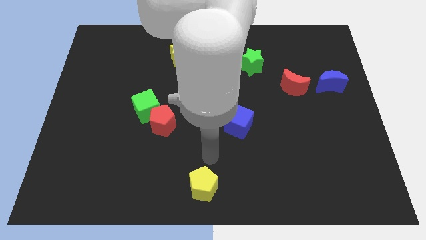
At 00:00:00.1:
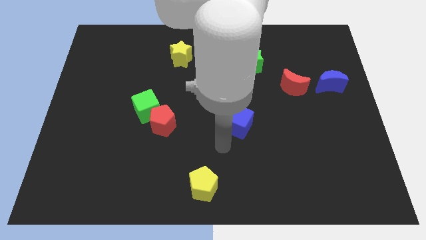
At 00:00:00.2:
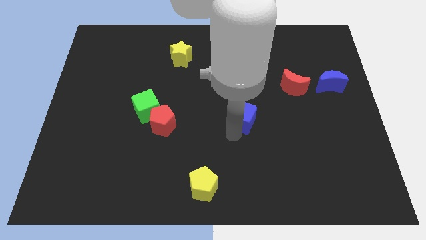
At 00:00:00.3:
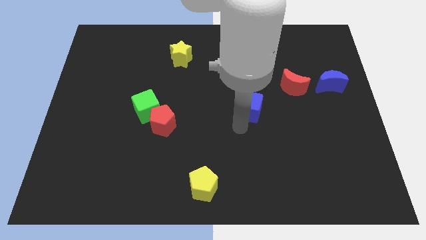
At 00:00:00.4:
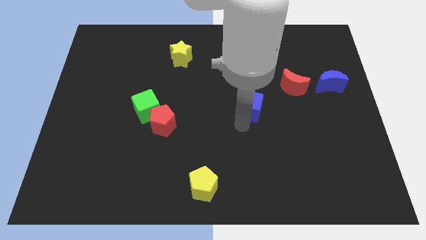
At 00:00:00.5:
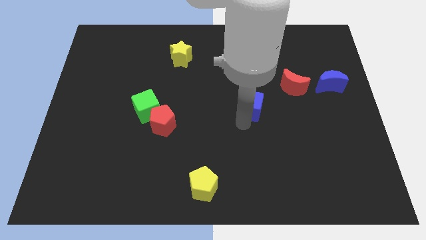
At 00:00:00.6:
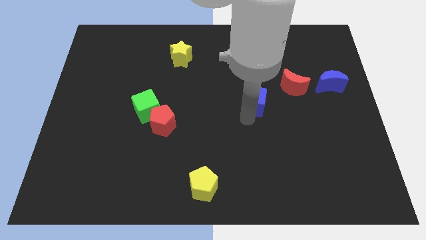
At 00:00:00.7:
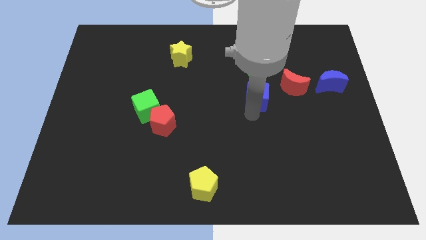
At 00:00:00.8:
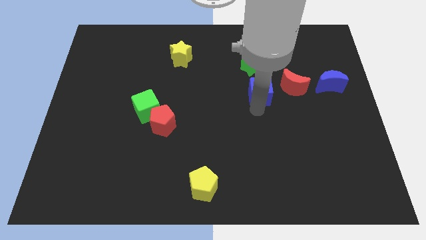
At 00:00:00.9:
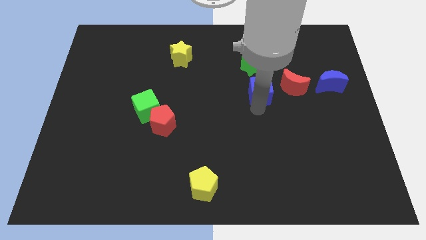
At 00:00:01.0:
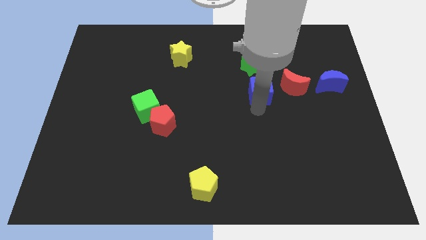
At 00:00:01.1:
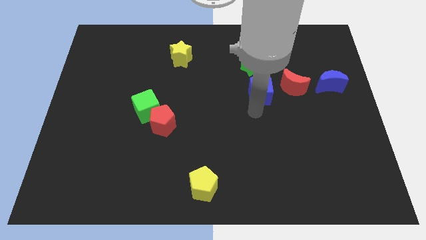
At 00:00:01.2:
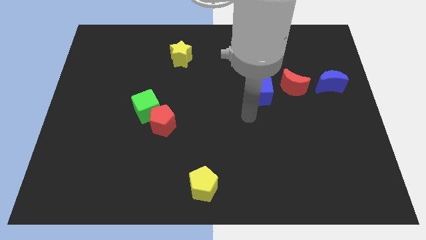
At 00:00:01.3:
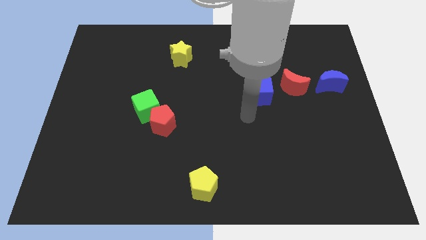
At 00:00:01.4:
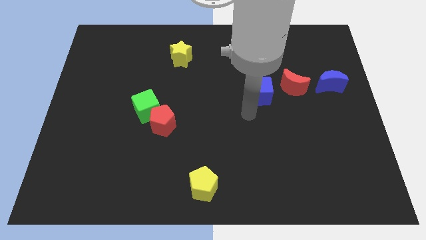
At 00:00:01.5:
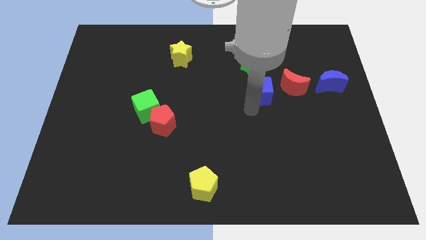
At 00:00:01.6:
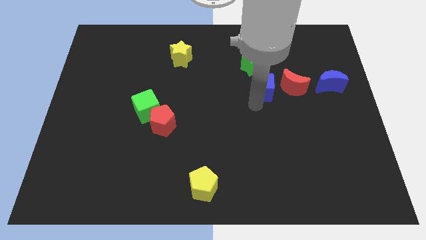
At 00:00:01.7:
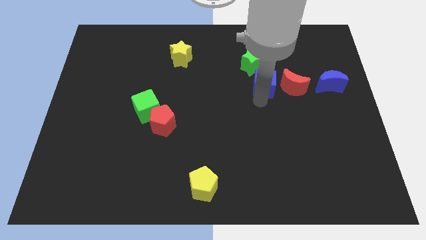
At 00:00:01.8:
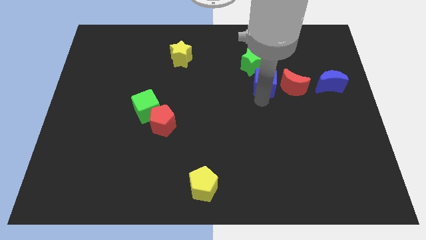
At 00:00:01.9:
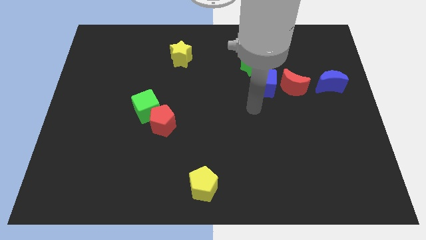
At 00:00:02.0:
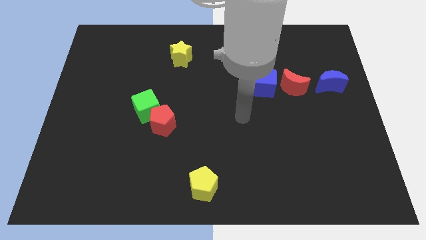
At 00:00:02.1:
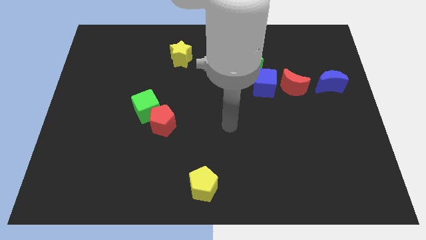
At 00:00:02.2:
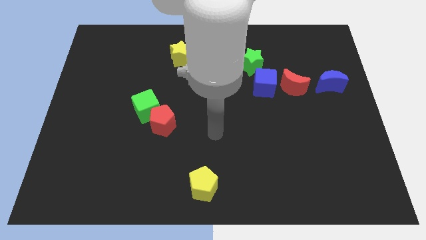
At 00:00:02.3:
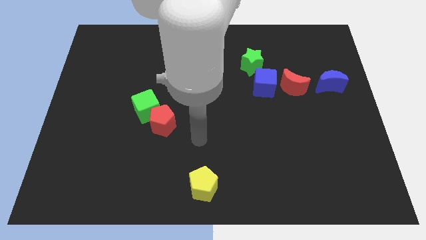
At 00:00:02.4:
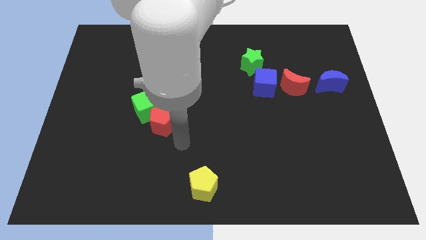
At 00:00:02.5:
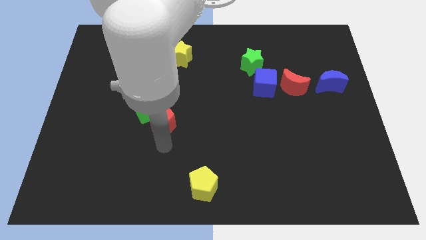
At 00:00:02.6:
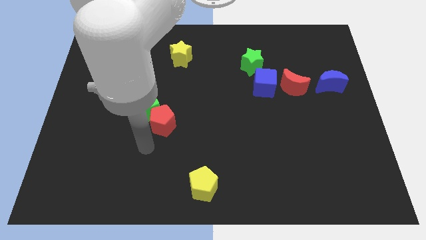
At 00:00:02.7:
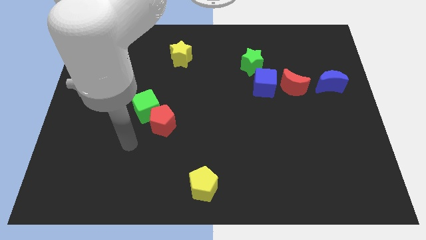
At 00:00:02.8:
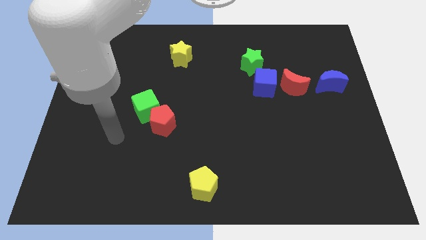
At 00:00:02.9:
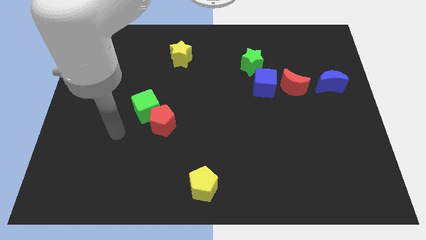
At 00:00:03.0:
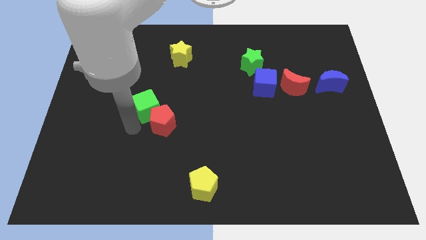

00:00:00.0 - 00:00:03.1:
push the blue cube to the left of the red moon

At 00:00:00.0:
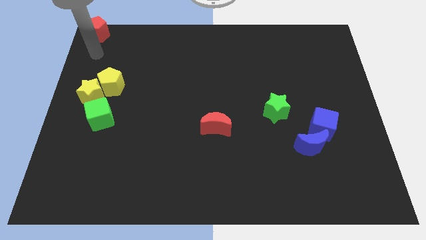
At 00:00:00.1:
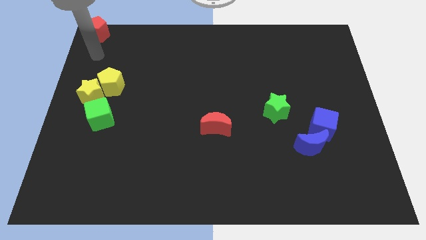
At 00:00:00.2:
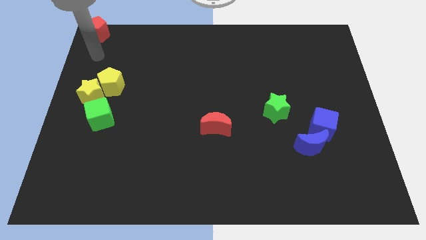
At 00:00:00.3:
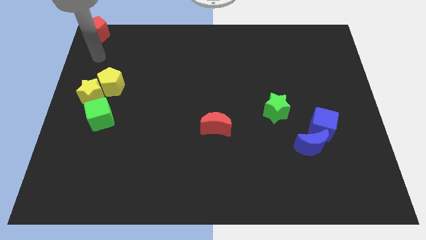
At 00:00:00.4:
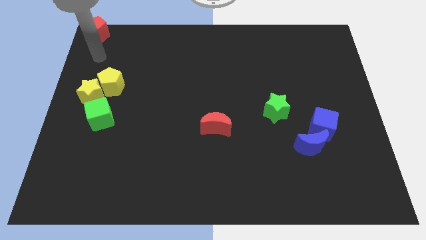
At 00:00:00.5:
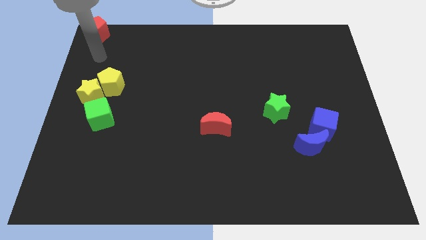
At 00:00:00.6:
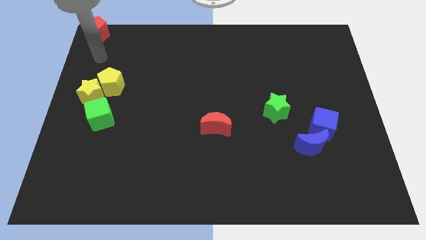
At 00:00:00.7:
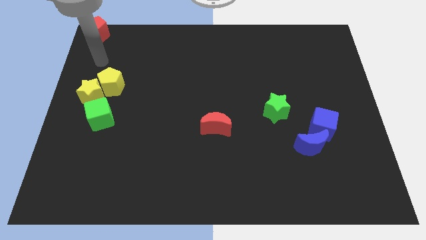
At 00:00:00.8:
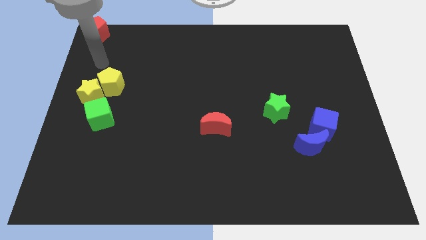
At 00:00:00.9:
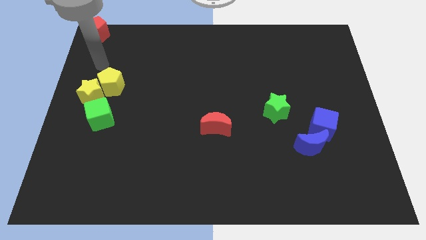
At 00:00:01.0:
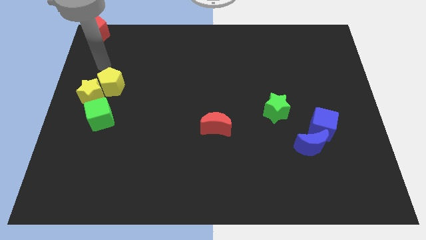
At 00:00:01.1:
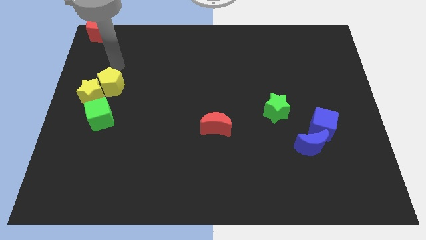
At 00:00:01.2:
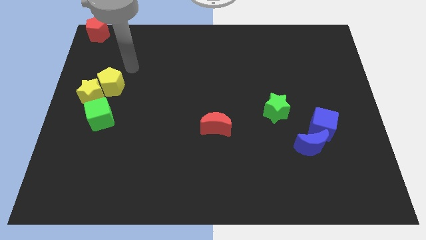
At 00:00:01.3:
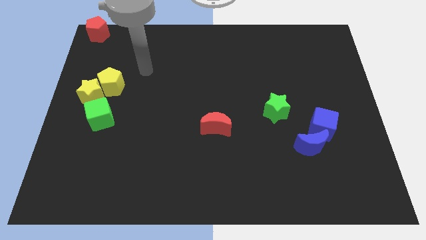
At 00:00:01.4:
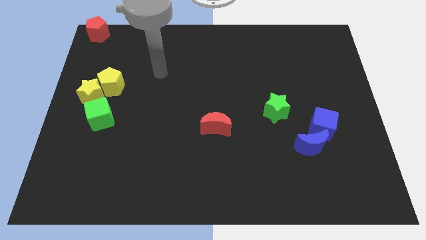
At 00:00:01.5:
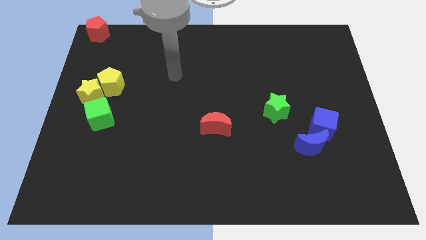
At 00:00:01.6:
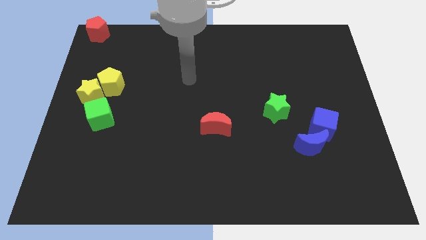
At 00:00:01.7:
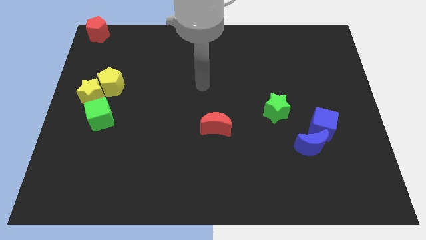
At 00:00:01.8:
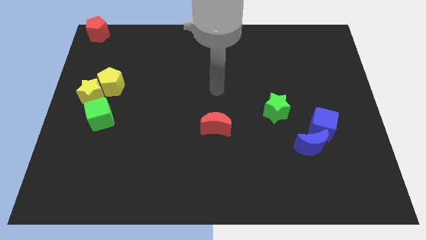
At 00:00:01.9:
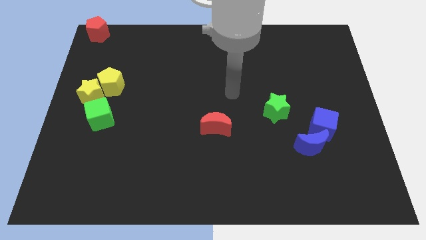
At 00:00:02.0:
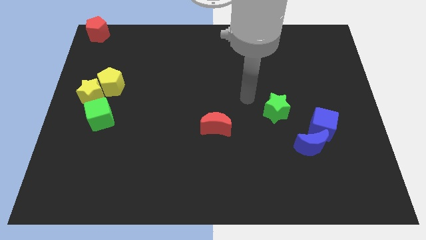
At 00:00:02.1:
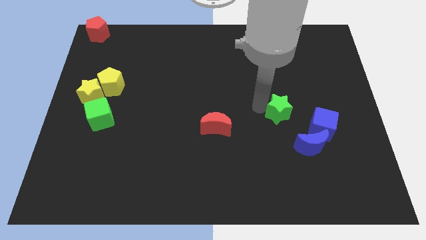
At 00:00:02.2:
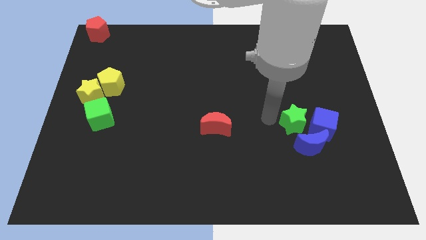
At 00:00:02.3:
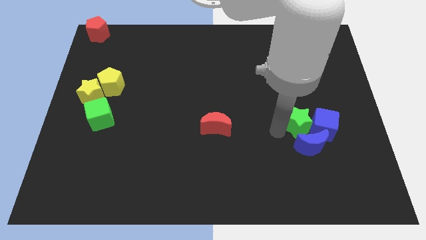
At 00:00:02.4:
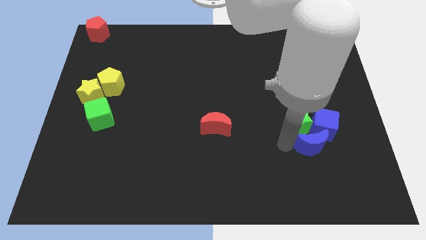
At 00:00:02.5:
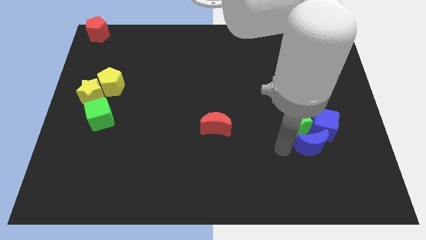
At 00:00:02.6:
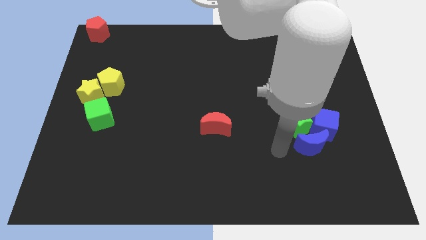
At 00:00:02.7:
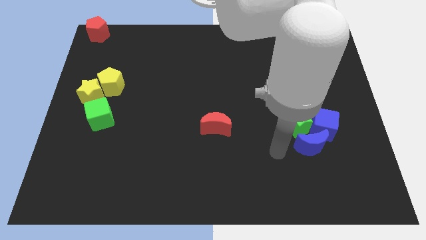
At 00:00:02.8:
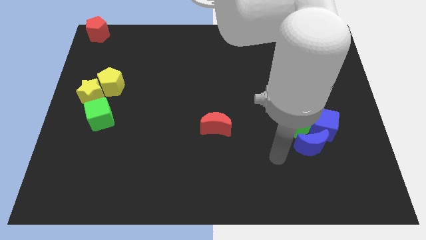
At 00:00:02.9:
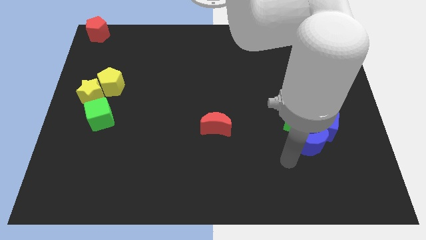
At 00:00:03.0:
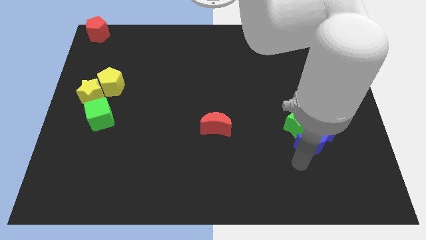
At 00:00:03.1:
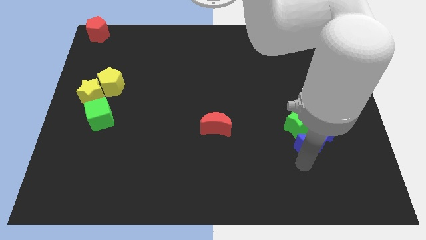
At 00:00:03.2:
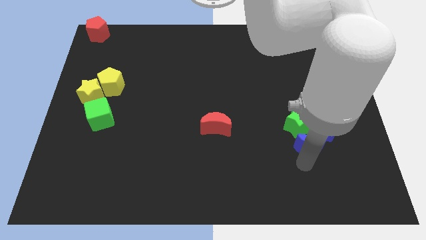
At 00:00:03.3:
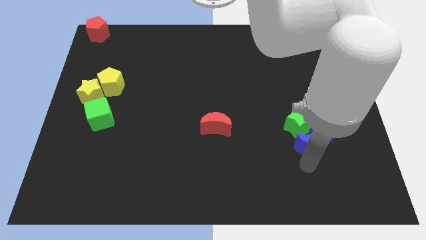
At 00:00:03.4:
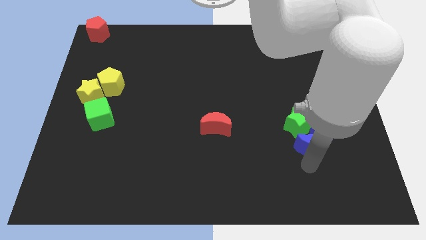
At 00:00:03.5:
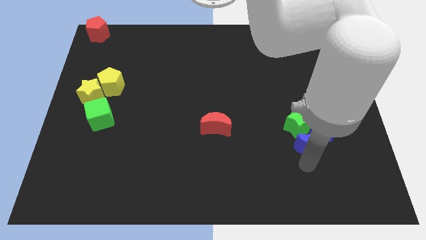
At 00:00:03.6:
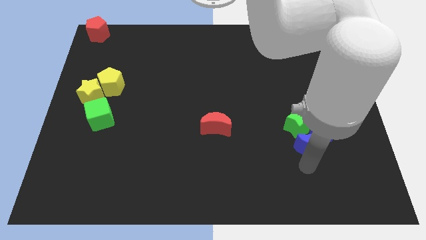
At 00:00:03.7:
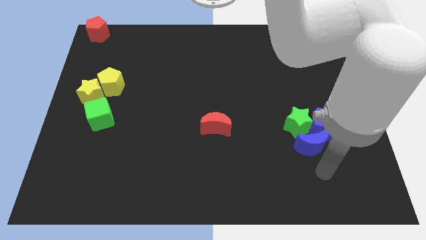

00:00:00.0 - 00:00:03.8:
push the green star into the blue cube and crescent

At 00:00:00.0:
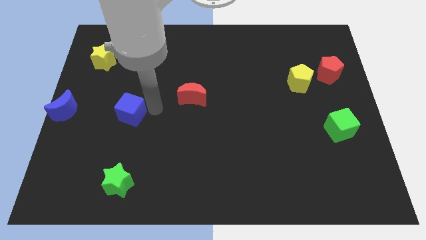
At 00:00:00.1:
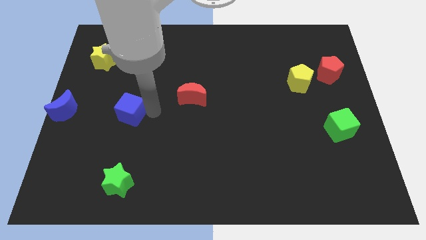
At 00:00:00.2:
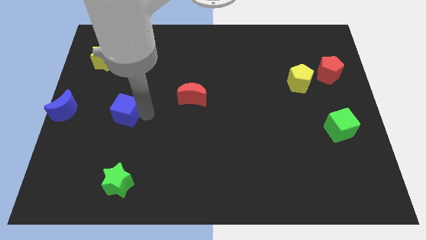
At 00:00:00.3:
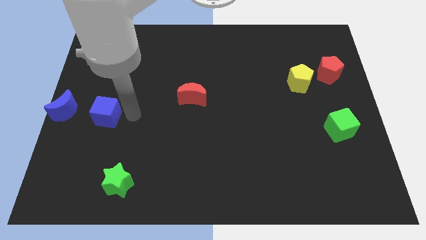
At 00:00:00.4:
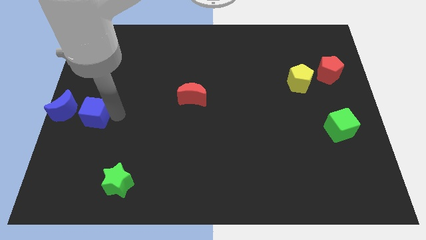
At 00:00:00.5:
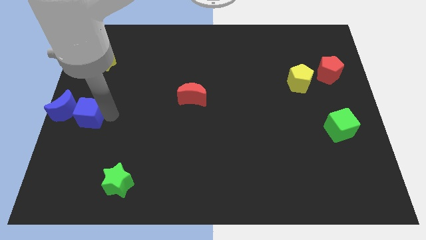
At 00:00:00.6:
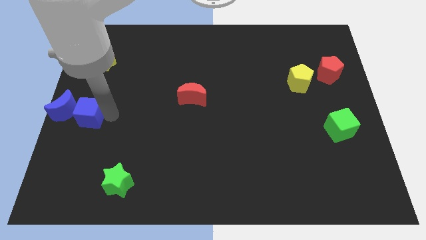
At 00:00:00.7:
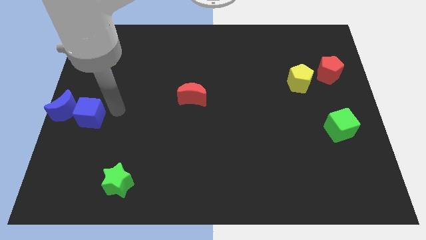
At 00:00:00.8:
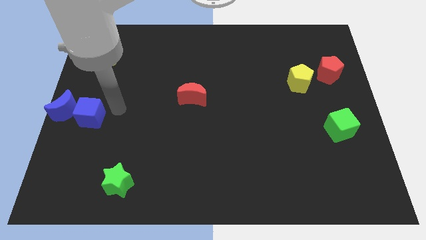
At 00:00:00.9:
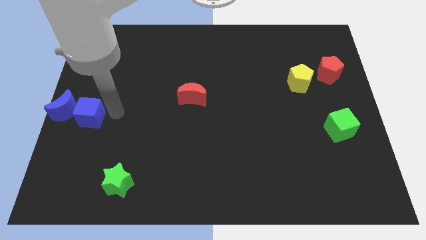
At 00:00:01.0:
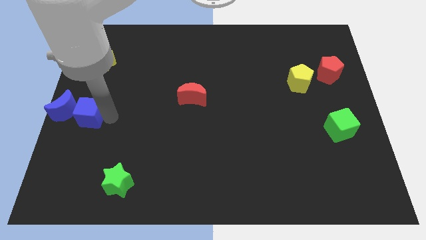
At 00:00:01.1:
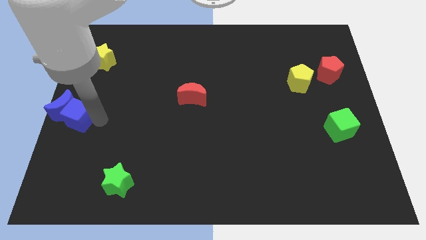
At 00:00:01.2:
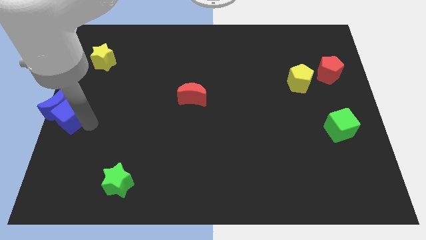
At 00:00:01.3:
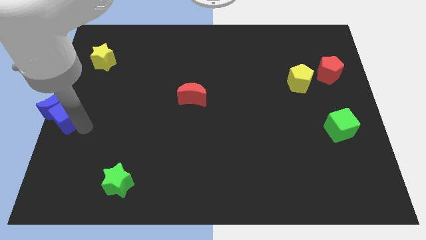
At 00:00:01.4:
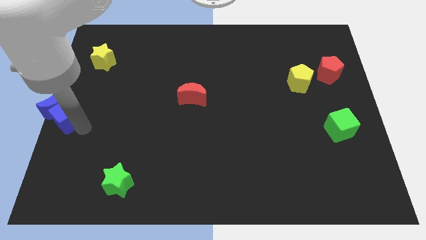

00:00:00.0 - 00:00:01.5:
push blue cube into the blue moon

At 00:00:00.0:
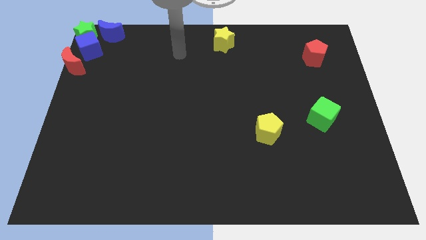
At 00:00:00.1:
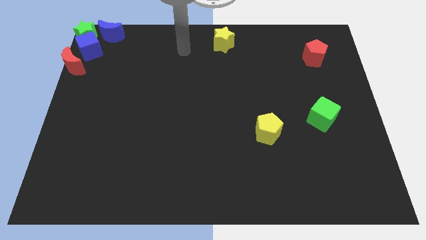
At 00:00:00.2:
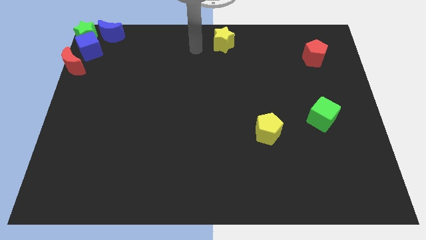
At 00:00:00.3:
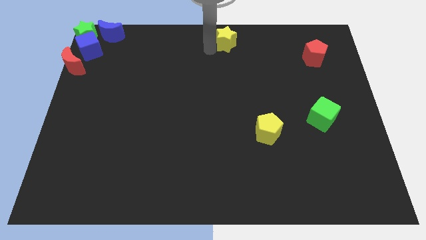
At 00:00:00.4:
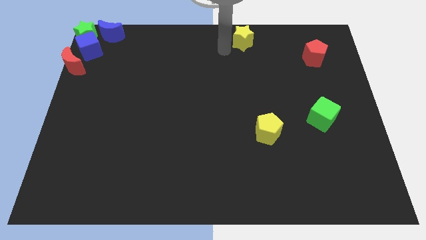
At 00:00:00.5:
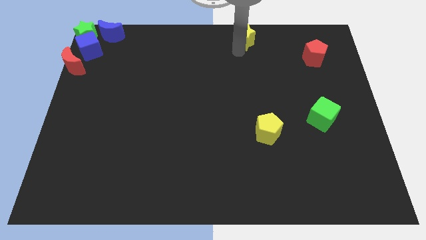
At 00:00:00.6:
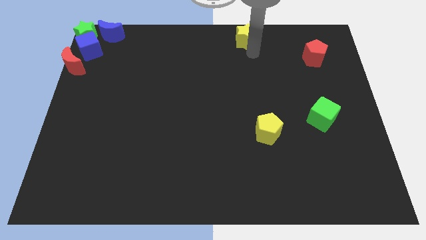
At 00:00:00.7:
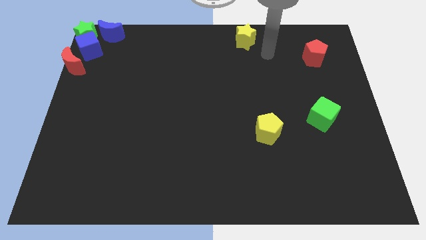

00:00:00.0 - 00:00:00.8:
push the yellow star to the right
